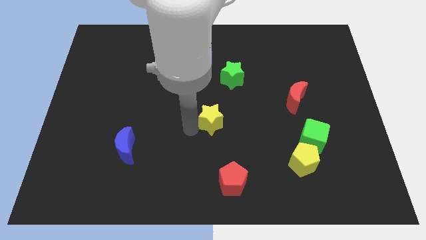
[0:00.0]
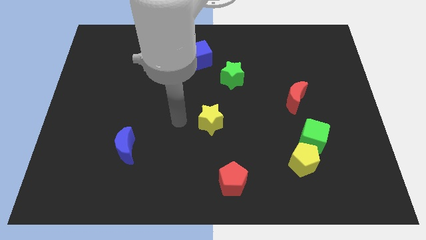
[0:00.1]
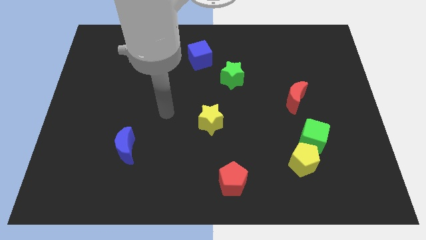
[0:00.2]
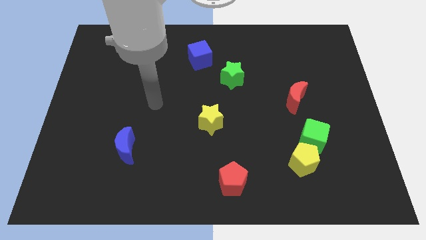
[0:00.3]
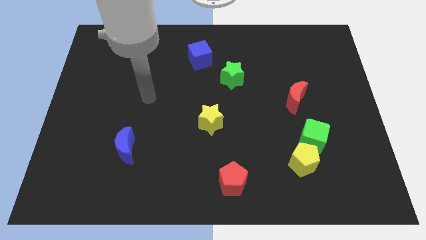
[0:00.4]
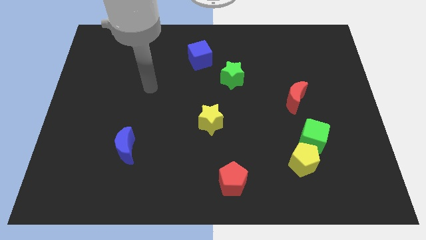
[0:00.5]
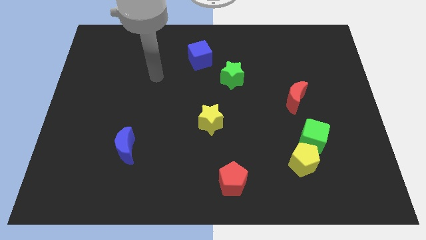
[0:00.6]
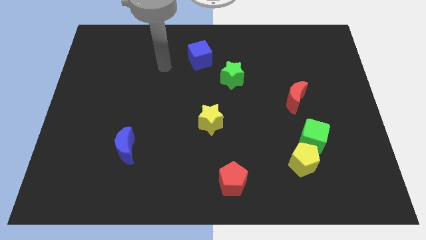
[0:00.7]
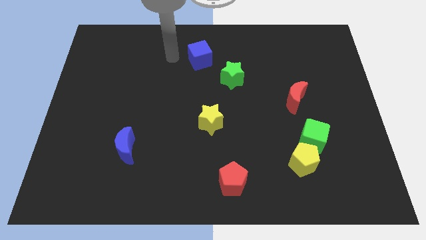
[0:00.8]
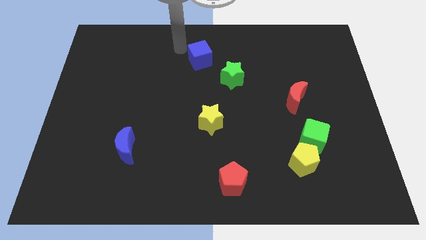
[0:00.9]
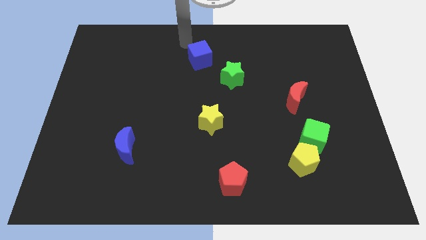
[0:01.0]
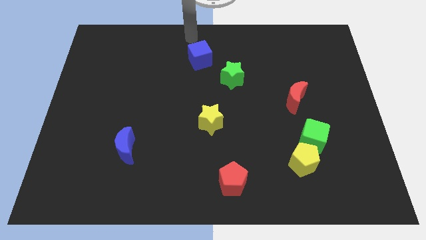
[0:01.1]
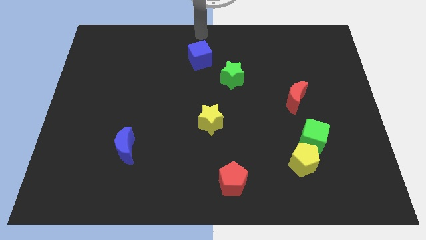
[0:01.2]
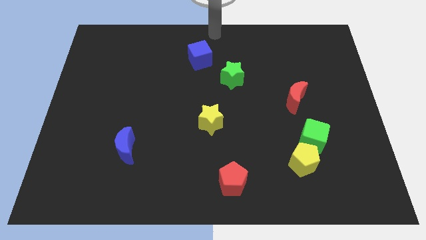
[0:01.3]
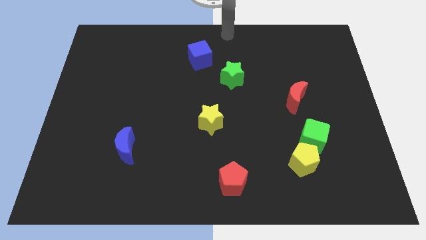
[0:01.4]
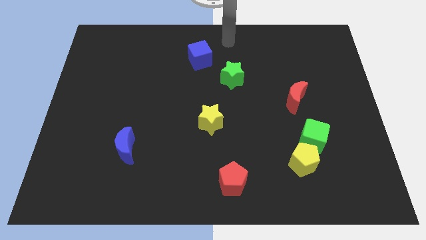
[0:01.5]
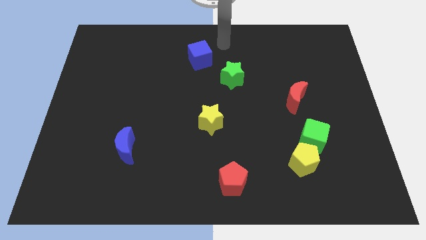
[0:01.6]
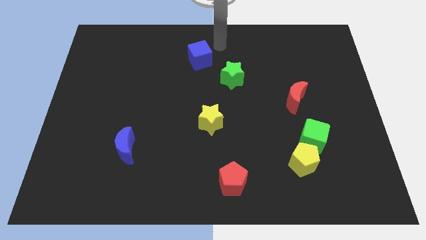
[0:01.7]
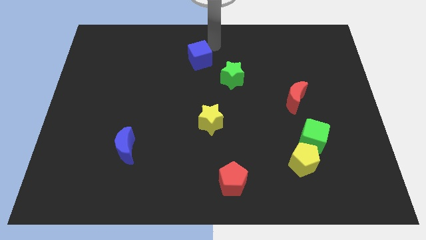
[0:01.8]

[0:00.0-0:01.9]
place the arm right to the blue cube

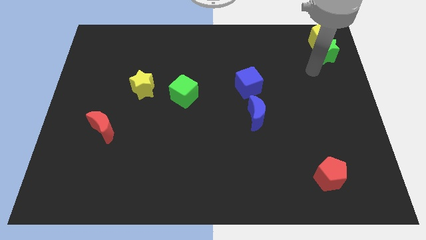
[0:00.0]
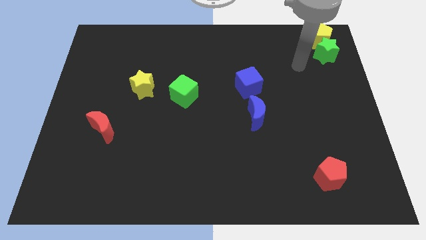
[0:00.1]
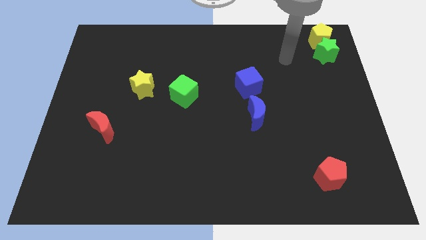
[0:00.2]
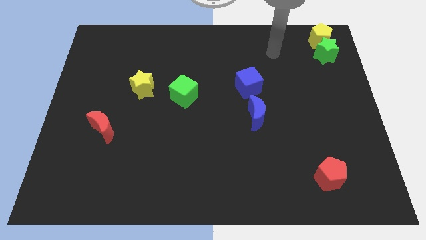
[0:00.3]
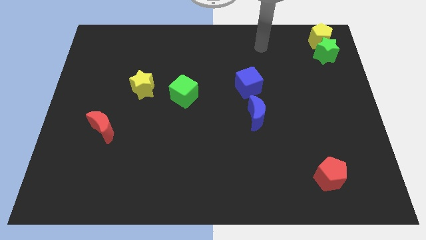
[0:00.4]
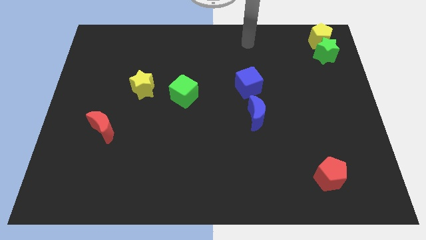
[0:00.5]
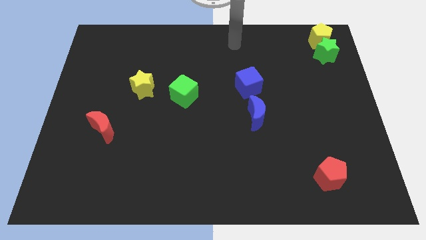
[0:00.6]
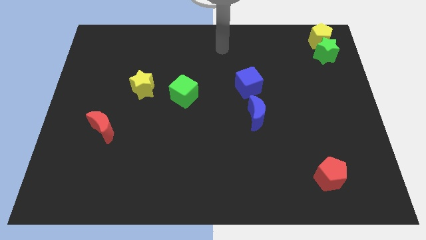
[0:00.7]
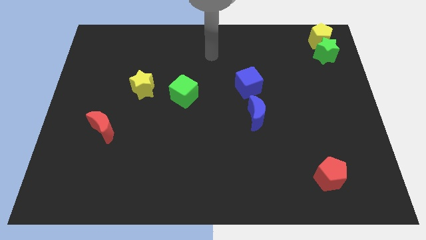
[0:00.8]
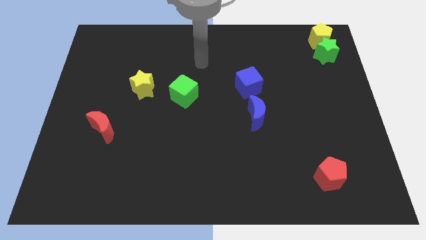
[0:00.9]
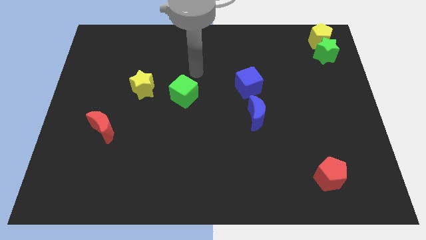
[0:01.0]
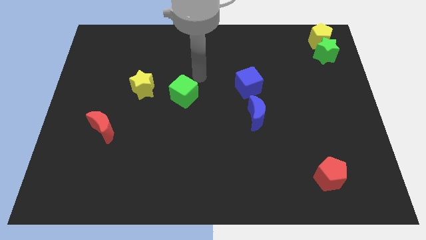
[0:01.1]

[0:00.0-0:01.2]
place your arm at the top of the green cube

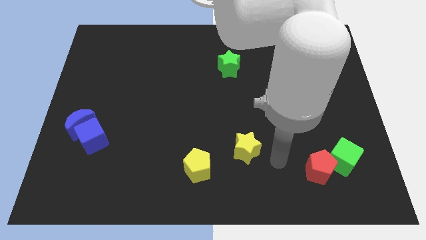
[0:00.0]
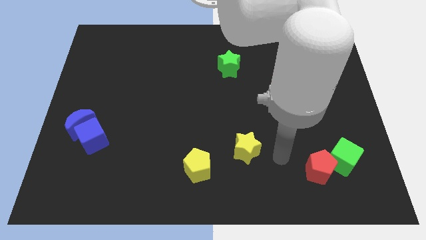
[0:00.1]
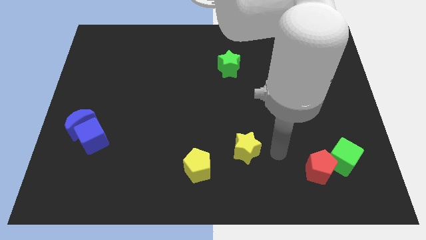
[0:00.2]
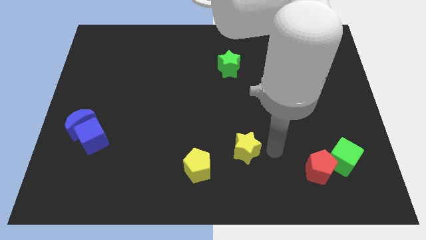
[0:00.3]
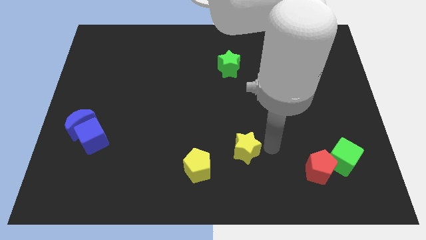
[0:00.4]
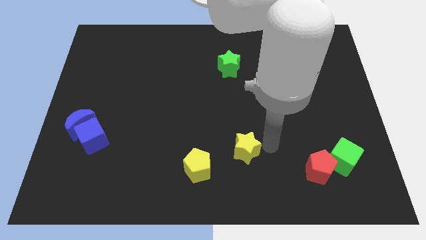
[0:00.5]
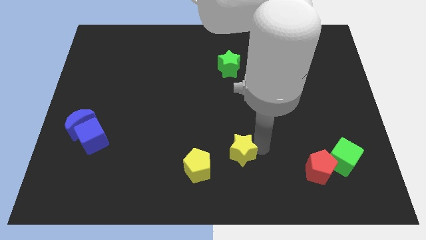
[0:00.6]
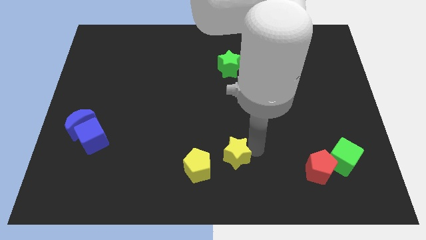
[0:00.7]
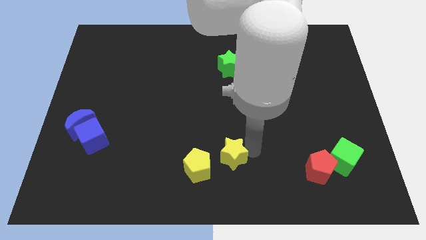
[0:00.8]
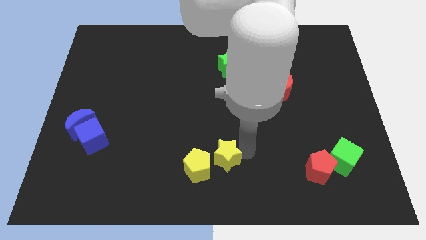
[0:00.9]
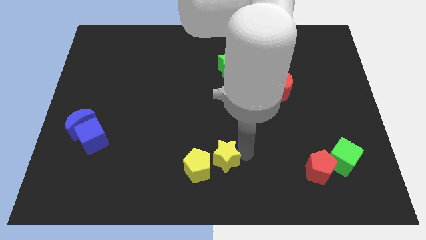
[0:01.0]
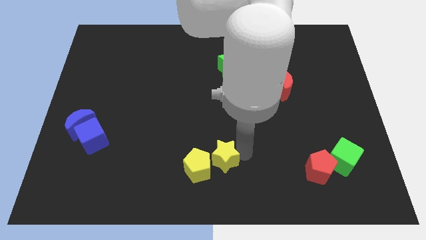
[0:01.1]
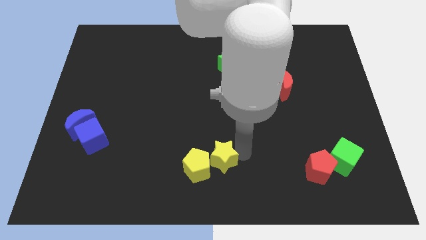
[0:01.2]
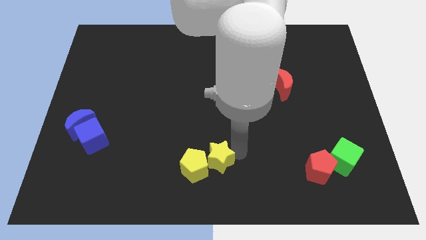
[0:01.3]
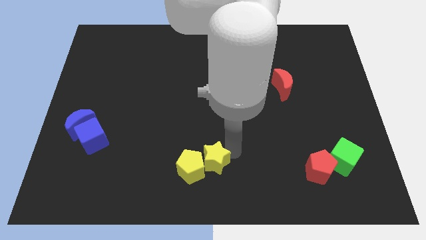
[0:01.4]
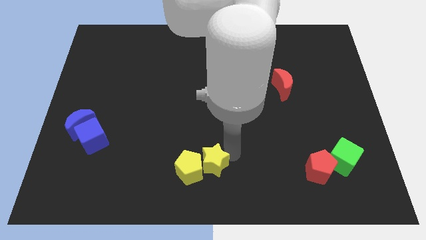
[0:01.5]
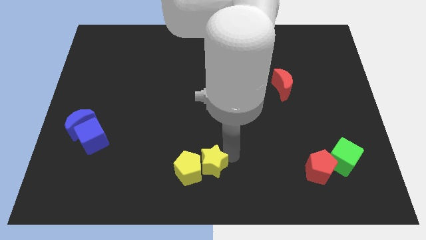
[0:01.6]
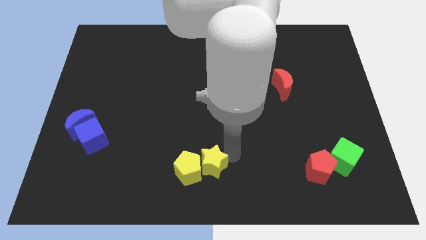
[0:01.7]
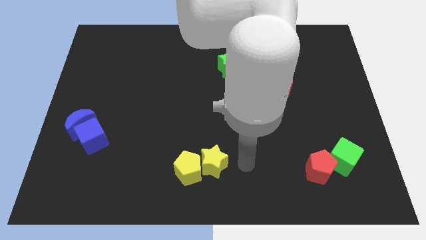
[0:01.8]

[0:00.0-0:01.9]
move the yellow star into the yellow pentagon

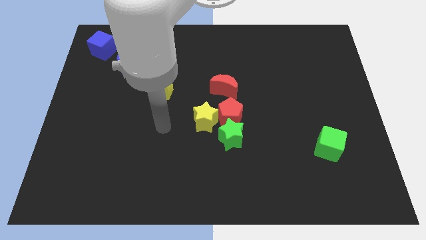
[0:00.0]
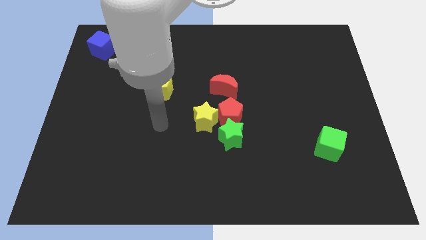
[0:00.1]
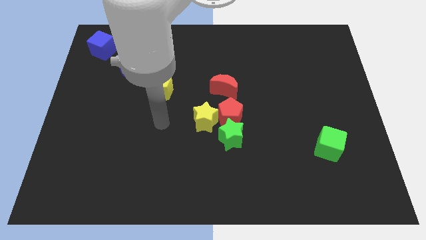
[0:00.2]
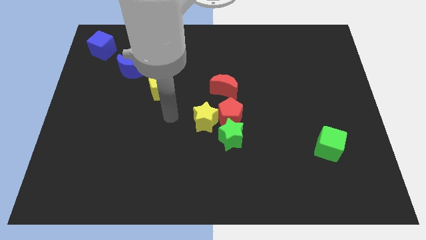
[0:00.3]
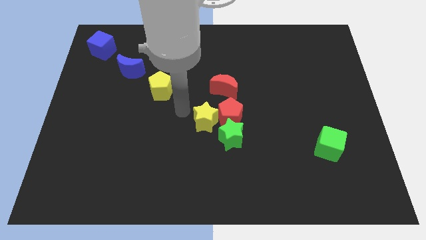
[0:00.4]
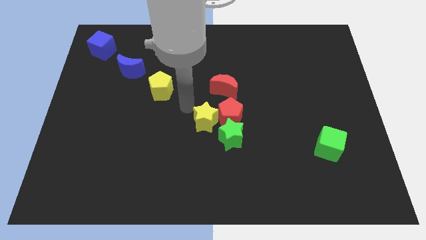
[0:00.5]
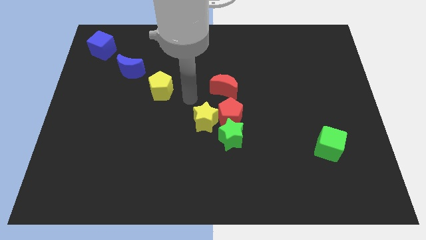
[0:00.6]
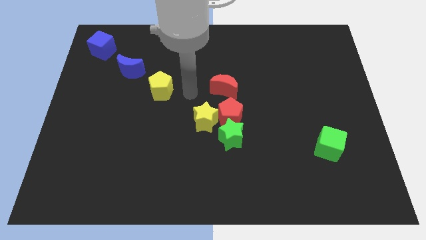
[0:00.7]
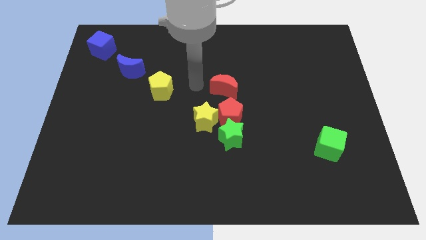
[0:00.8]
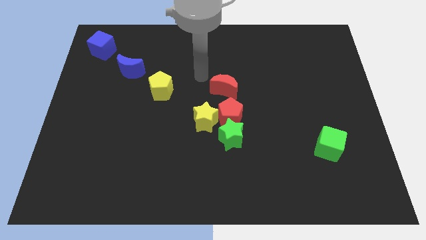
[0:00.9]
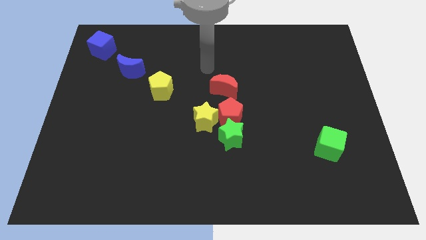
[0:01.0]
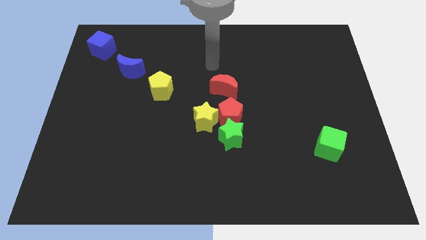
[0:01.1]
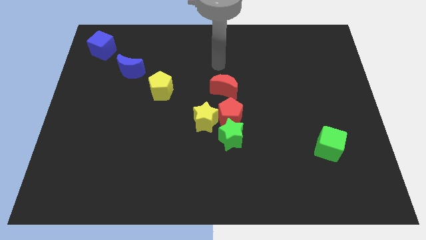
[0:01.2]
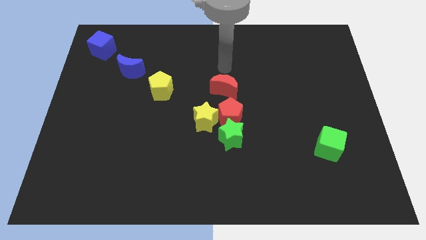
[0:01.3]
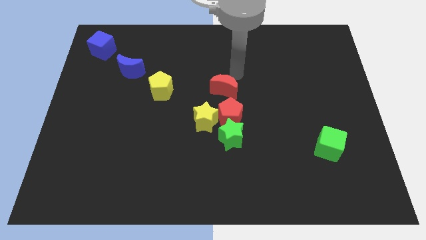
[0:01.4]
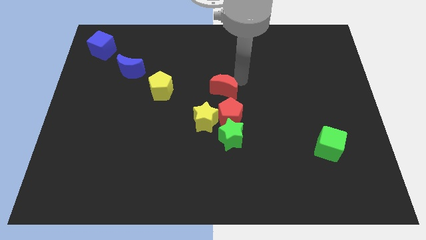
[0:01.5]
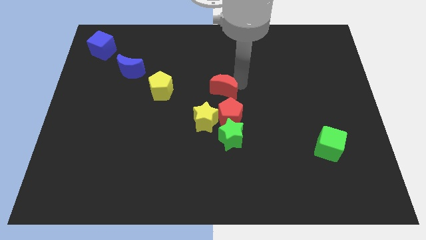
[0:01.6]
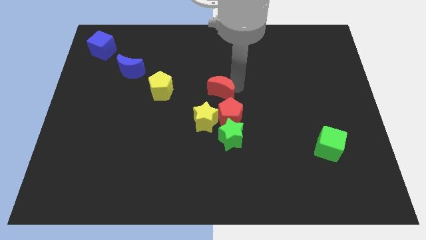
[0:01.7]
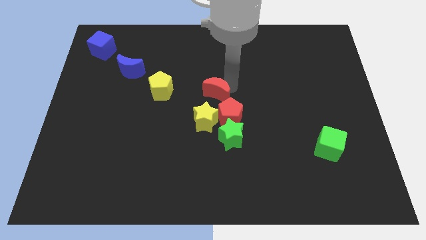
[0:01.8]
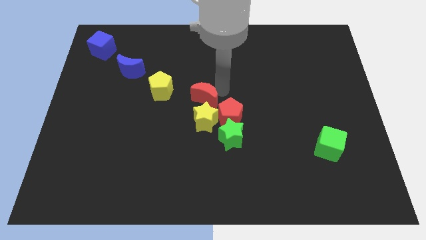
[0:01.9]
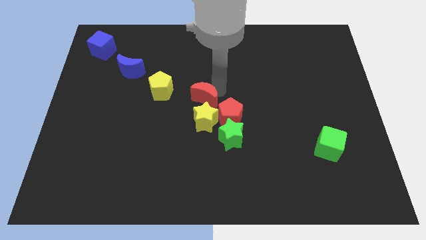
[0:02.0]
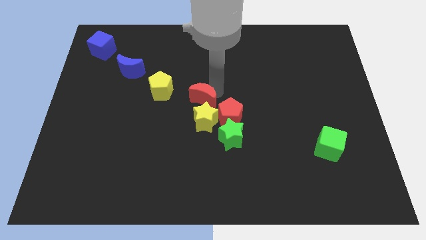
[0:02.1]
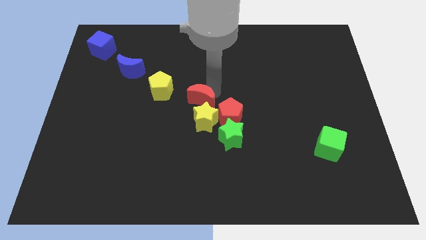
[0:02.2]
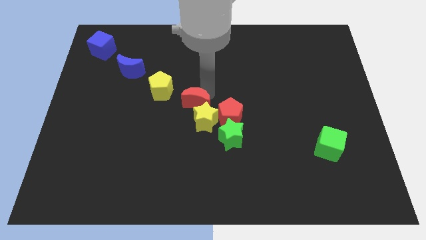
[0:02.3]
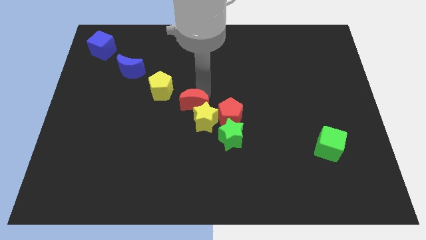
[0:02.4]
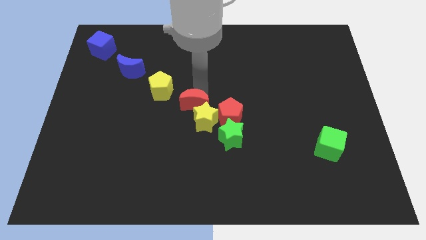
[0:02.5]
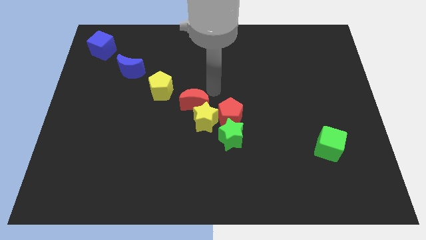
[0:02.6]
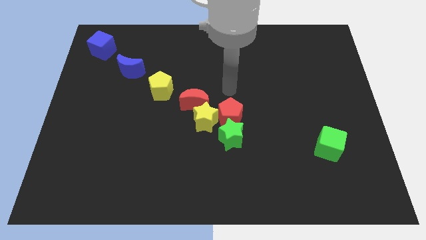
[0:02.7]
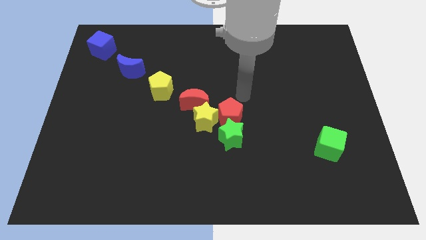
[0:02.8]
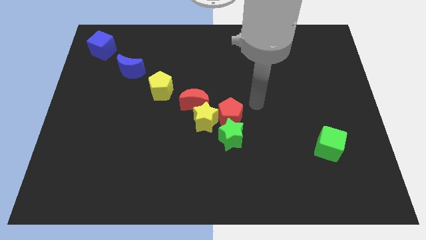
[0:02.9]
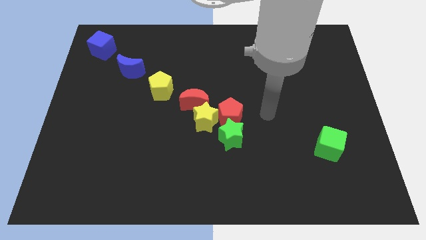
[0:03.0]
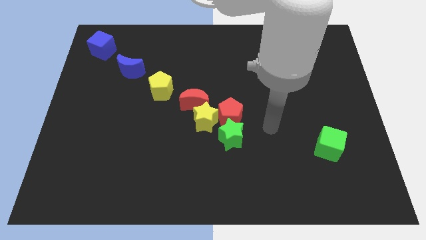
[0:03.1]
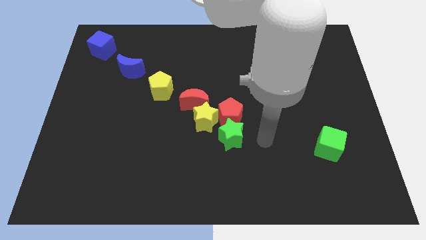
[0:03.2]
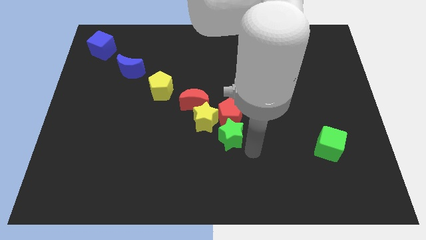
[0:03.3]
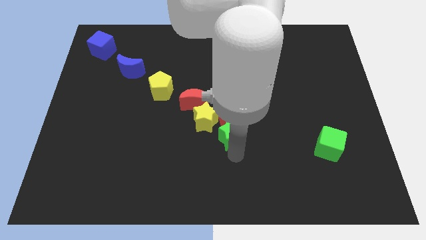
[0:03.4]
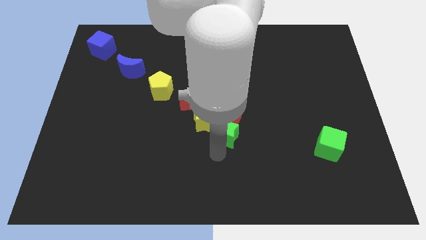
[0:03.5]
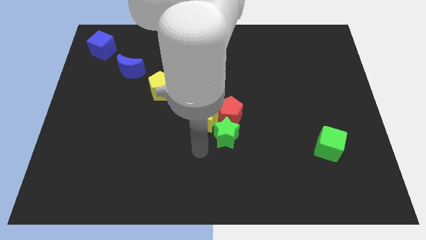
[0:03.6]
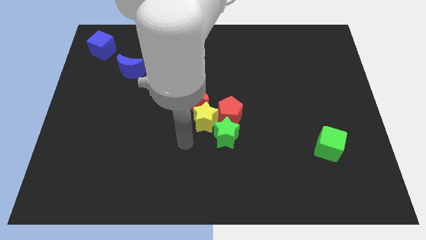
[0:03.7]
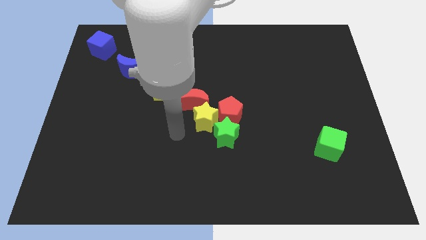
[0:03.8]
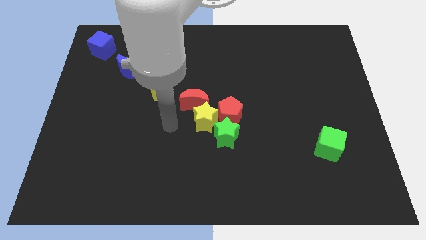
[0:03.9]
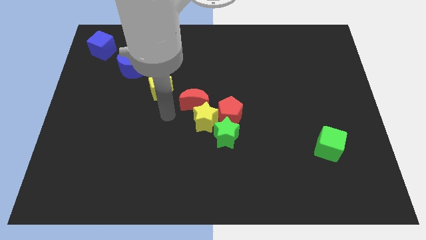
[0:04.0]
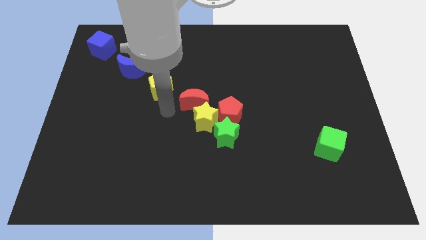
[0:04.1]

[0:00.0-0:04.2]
push the red crescent towards the yellow star
